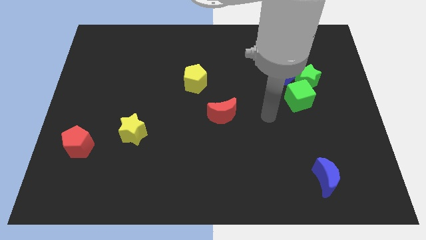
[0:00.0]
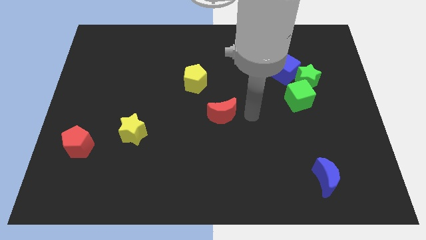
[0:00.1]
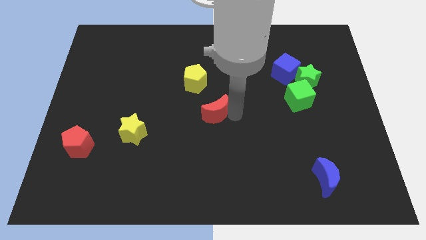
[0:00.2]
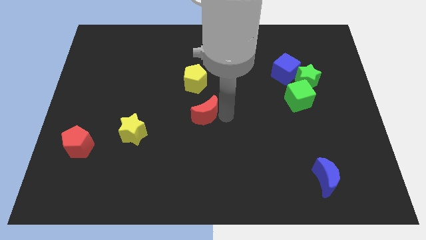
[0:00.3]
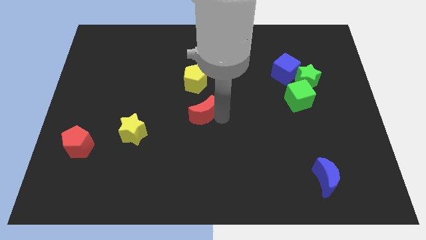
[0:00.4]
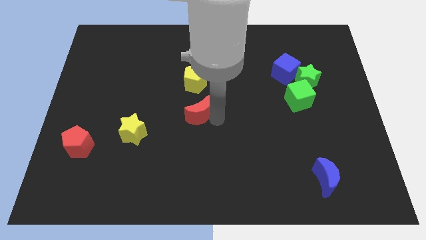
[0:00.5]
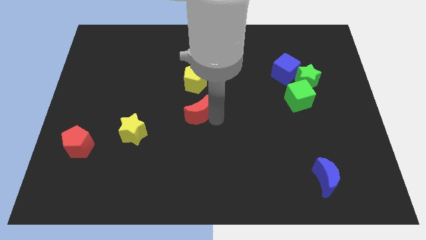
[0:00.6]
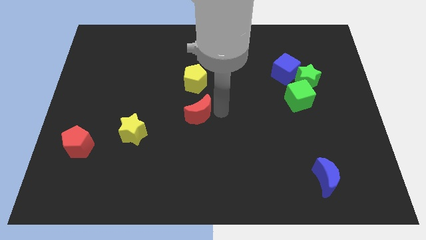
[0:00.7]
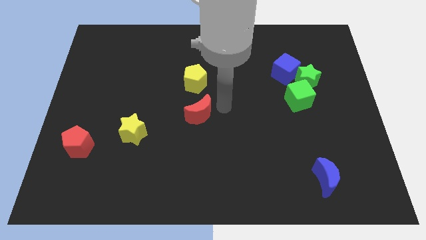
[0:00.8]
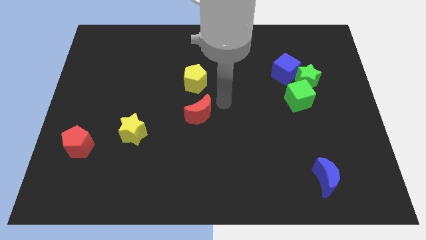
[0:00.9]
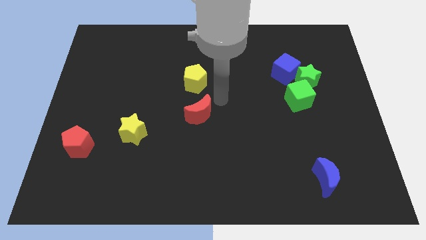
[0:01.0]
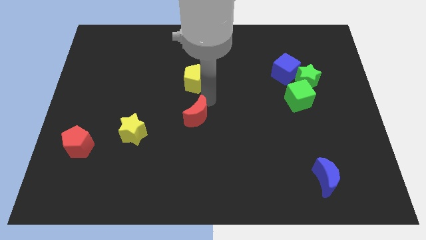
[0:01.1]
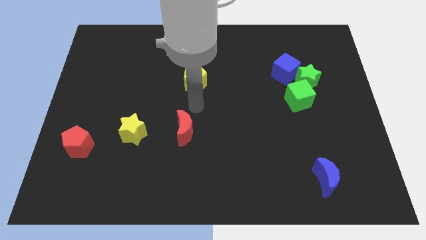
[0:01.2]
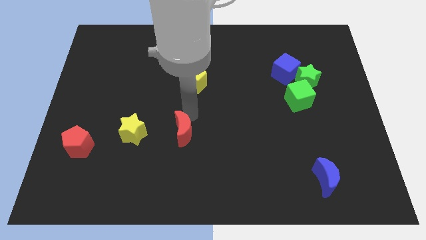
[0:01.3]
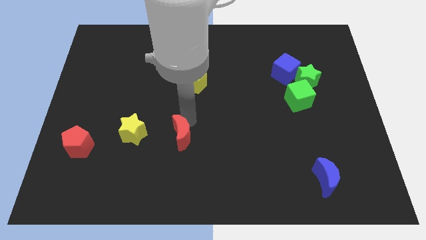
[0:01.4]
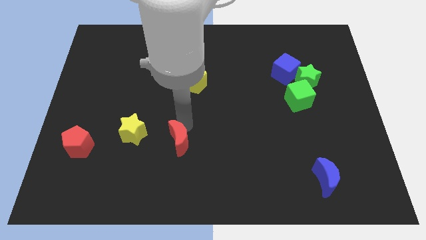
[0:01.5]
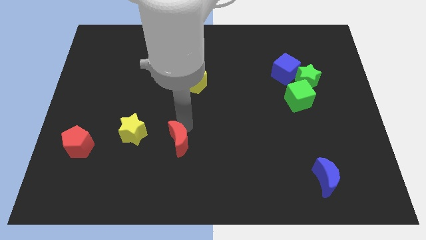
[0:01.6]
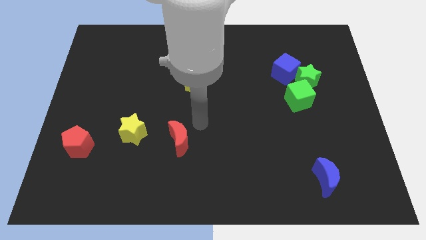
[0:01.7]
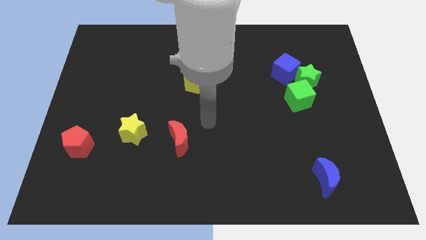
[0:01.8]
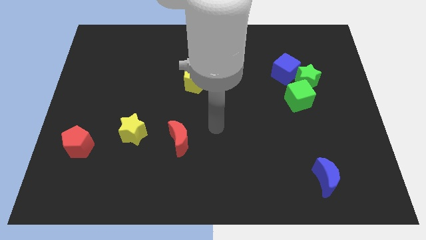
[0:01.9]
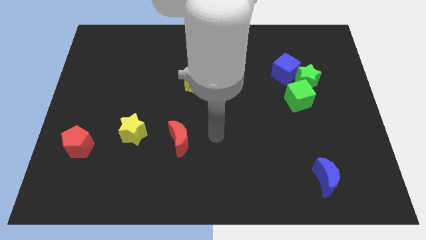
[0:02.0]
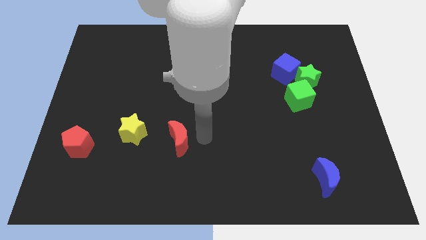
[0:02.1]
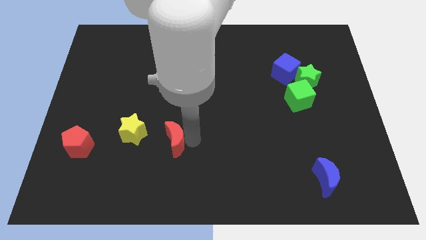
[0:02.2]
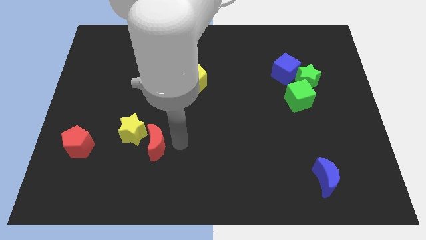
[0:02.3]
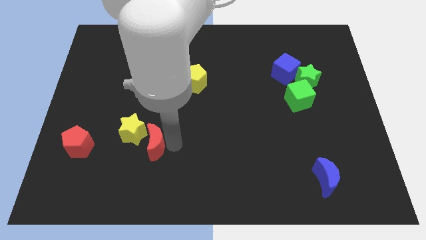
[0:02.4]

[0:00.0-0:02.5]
place the red crescent diagonal to the yellow star

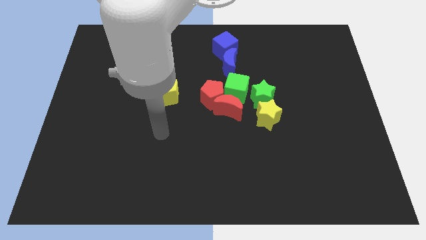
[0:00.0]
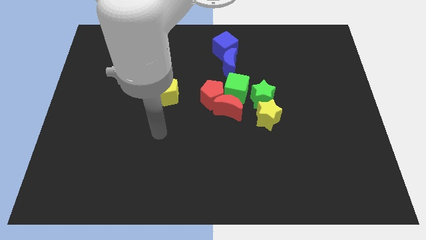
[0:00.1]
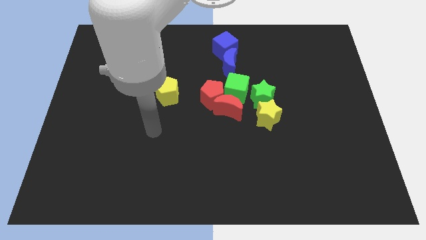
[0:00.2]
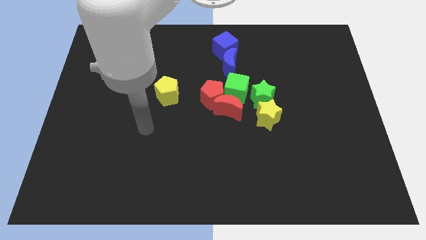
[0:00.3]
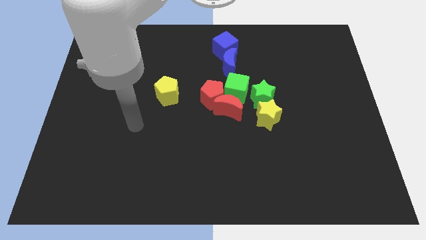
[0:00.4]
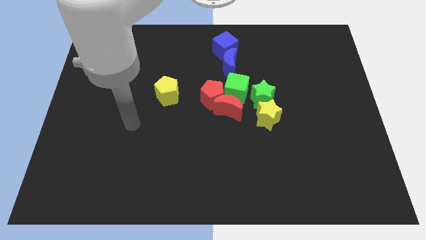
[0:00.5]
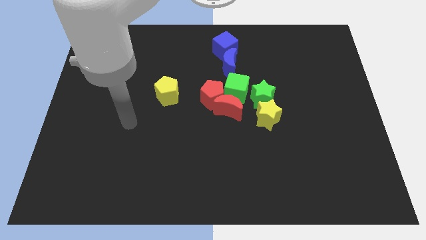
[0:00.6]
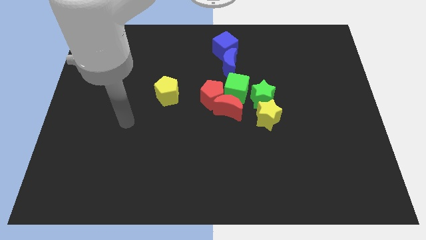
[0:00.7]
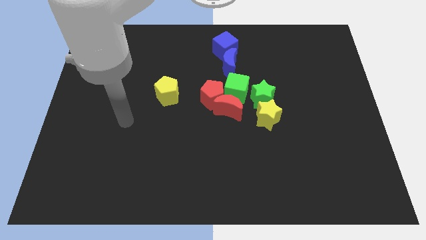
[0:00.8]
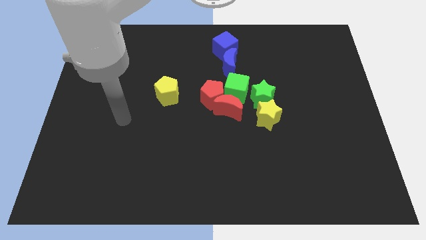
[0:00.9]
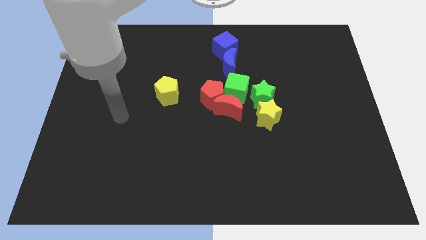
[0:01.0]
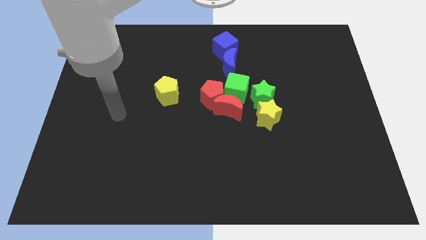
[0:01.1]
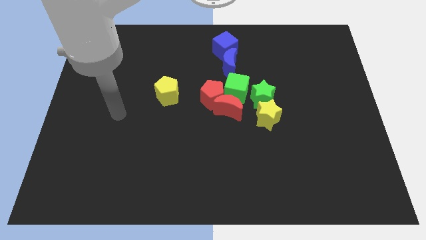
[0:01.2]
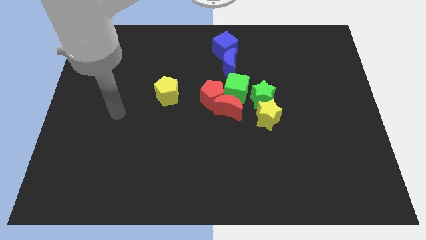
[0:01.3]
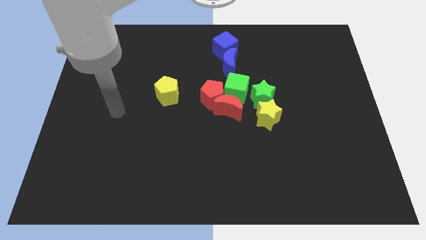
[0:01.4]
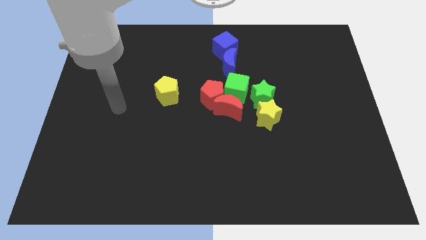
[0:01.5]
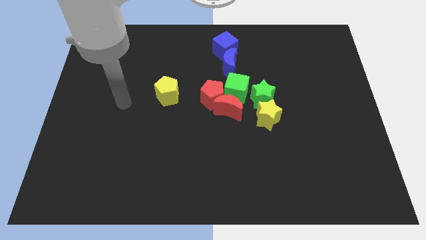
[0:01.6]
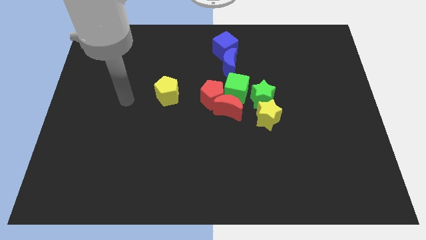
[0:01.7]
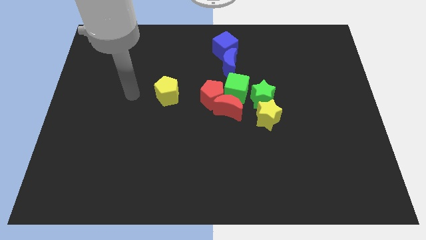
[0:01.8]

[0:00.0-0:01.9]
move the hand at the left side of the yellow pentagon horizontally

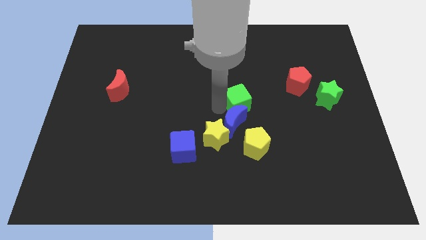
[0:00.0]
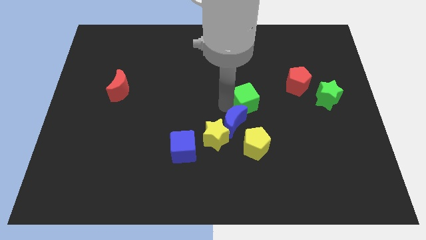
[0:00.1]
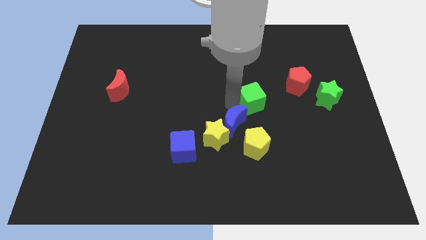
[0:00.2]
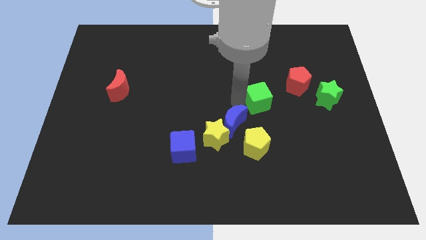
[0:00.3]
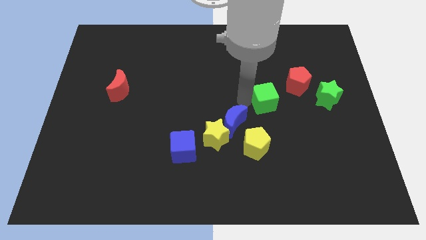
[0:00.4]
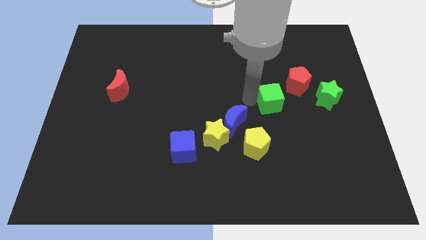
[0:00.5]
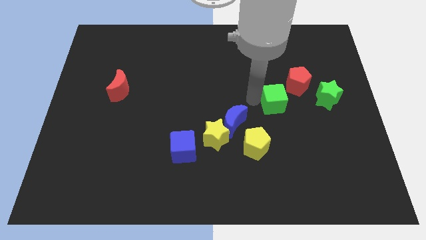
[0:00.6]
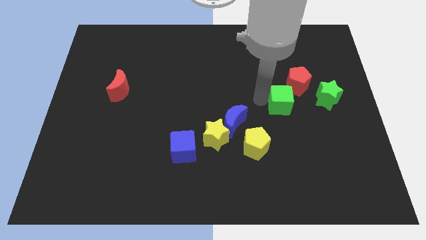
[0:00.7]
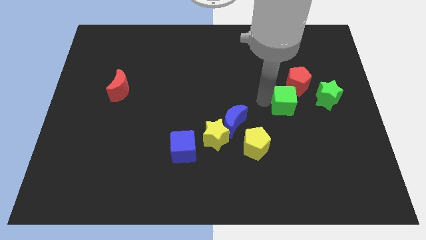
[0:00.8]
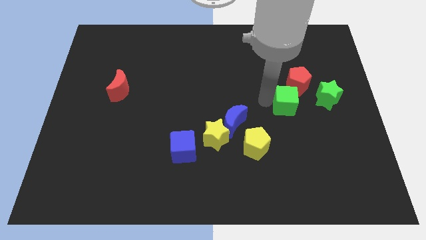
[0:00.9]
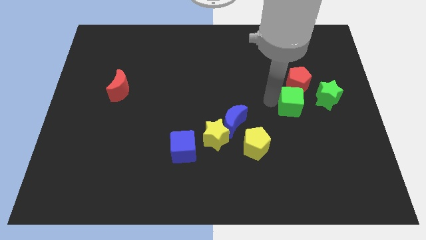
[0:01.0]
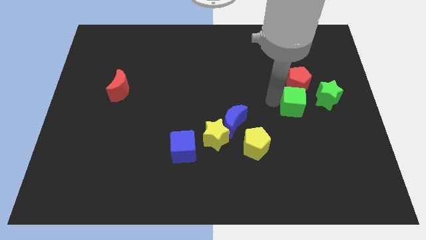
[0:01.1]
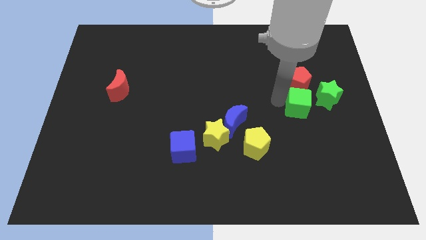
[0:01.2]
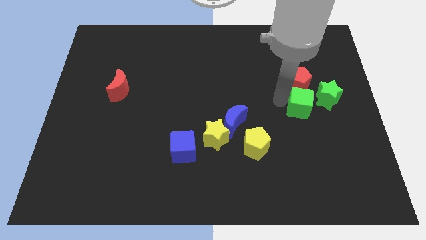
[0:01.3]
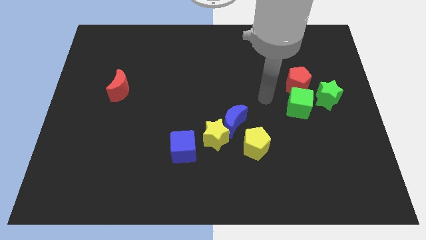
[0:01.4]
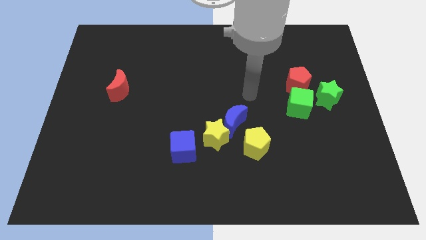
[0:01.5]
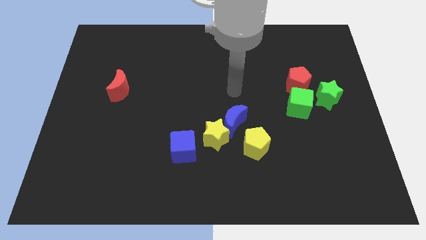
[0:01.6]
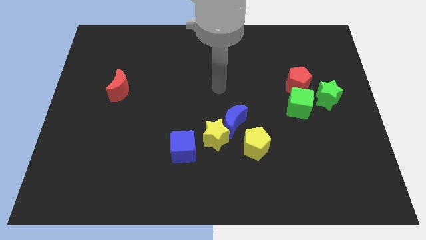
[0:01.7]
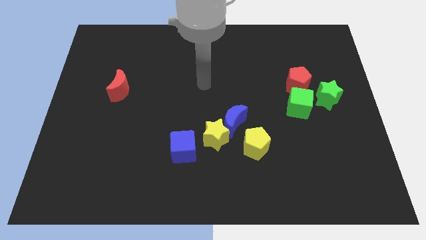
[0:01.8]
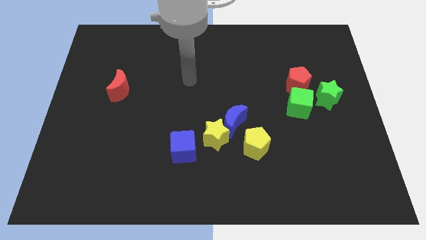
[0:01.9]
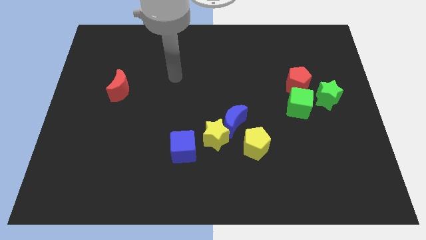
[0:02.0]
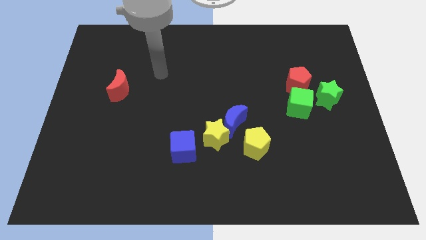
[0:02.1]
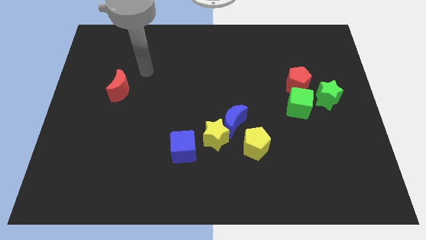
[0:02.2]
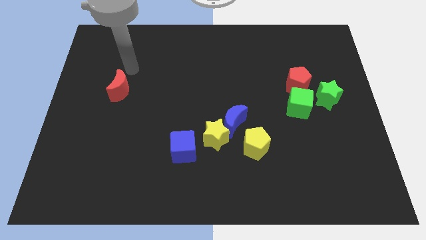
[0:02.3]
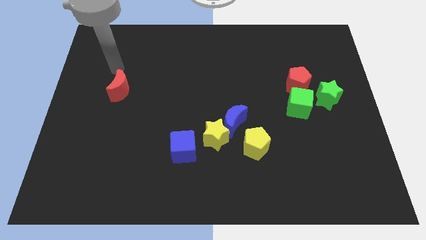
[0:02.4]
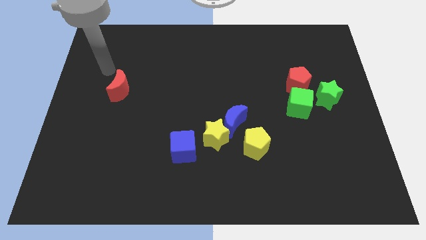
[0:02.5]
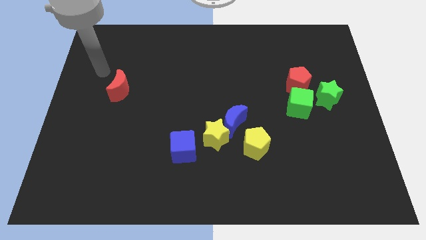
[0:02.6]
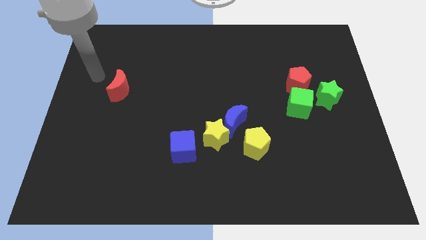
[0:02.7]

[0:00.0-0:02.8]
place the green cube below the red pentagon

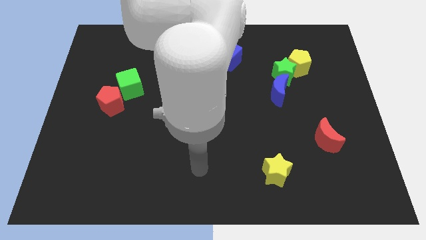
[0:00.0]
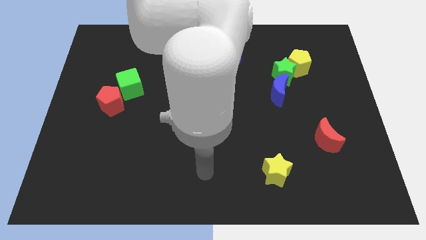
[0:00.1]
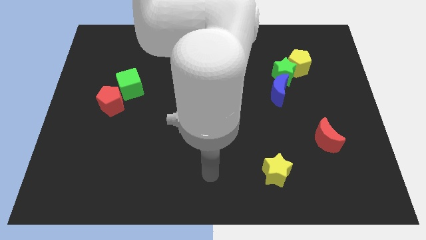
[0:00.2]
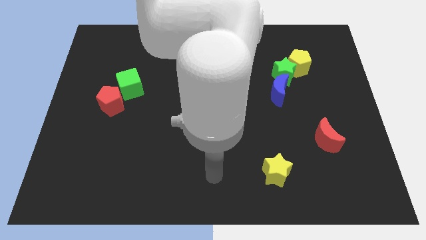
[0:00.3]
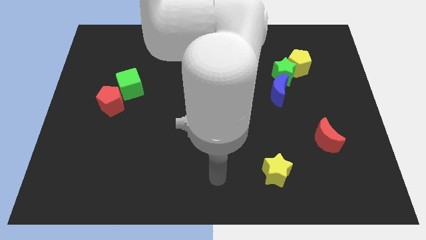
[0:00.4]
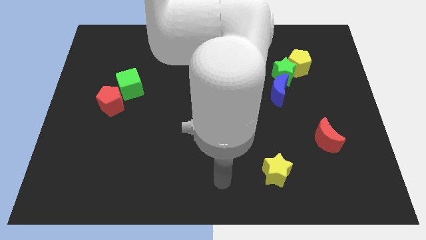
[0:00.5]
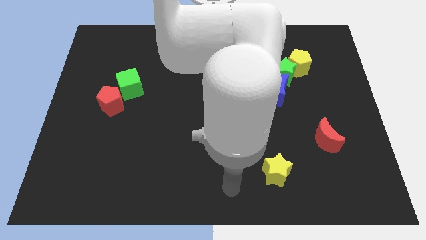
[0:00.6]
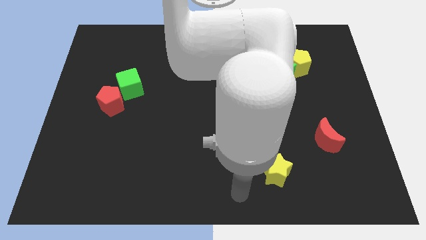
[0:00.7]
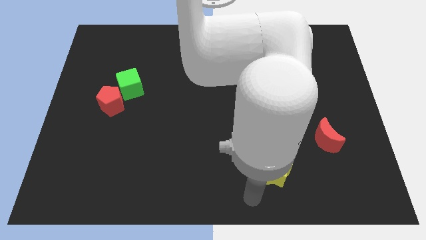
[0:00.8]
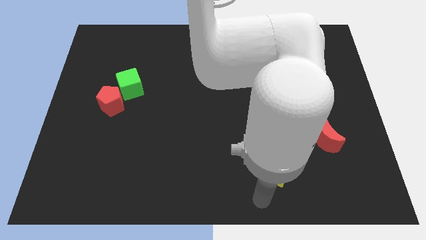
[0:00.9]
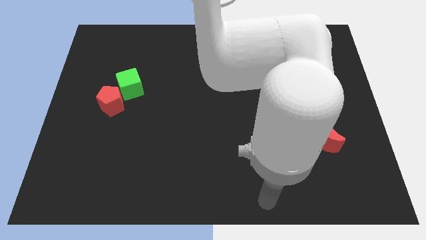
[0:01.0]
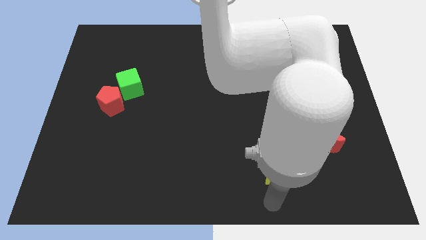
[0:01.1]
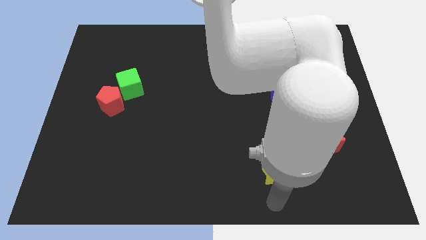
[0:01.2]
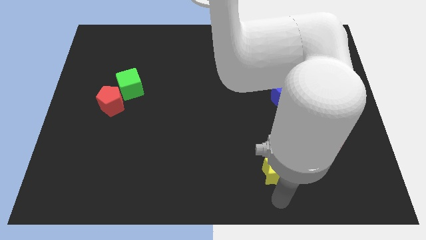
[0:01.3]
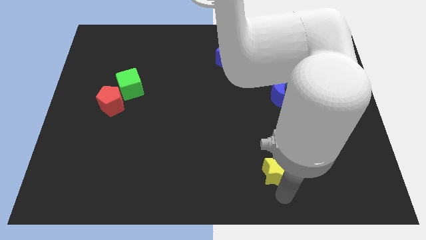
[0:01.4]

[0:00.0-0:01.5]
point your arm at the bottom of the yellow star

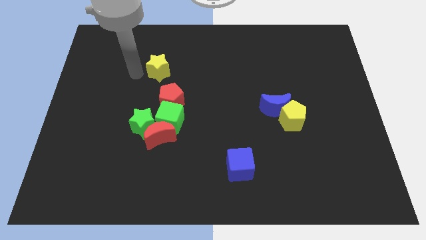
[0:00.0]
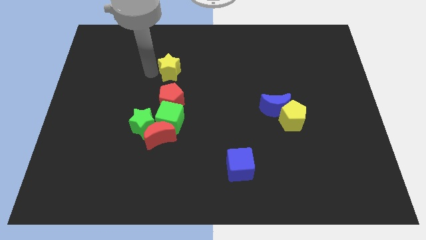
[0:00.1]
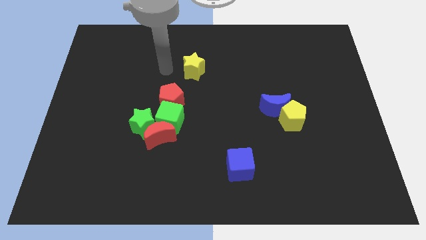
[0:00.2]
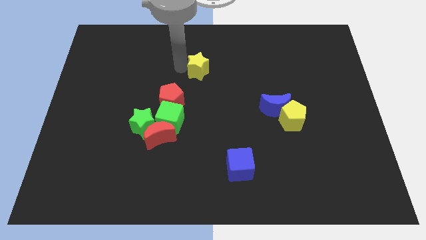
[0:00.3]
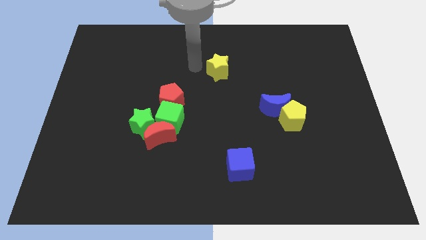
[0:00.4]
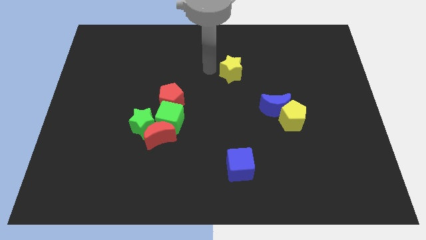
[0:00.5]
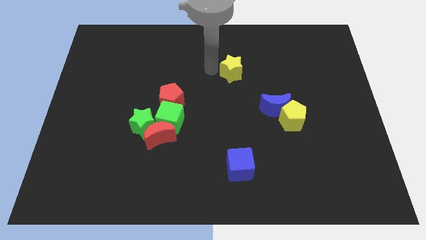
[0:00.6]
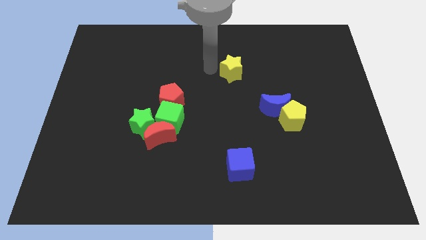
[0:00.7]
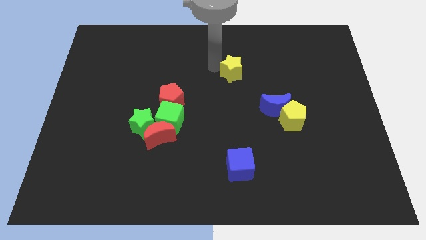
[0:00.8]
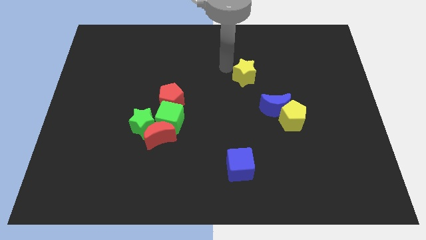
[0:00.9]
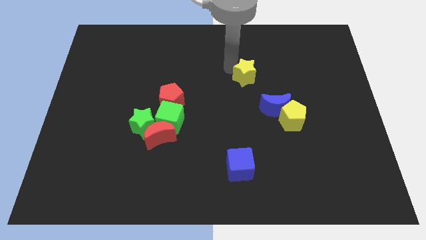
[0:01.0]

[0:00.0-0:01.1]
move the yellow star diagonally top right to the red pentagon
